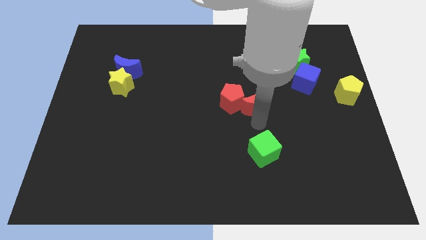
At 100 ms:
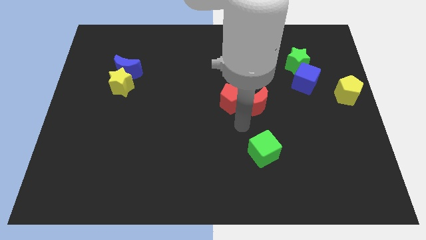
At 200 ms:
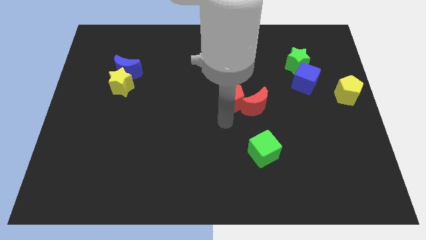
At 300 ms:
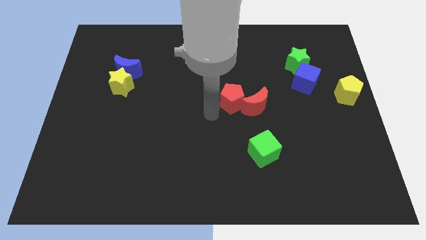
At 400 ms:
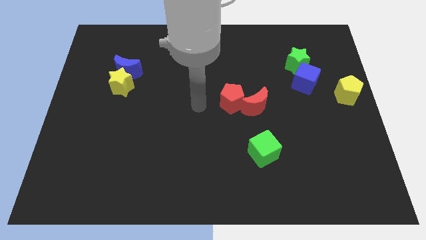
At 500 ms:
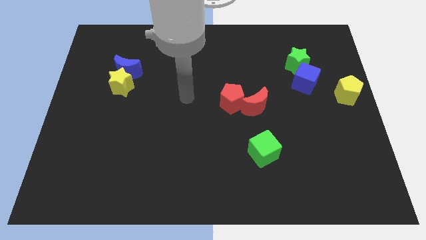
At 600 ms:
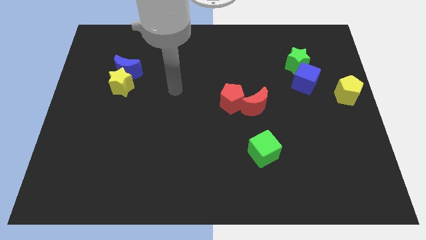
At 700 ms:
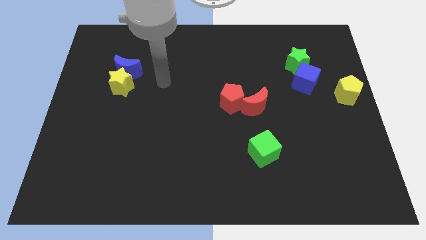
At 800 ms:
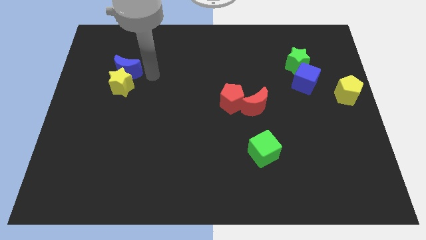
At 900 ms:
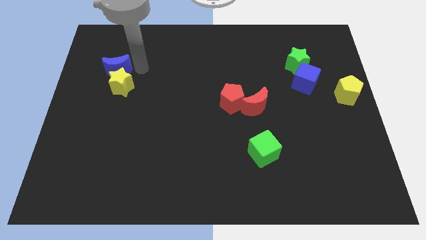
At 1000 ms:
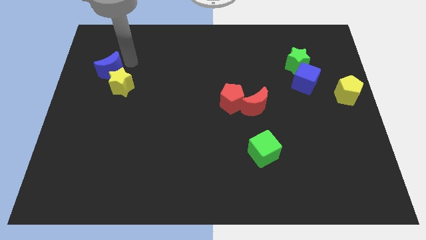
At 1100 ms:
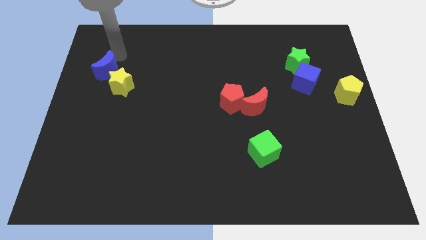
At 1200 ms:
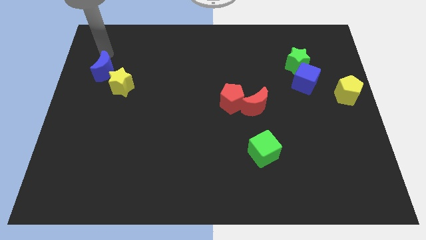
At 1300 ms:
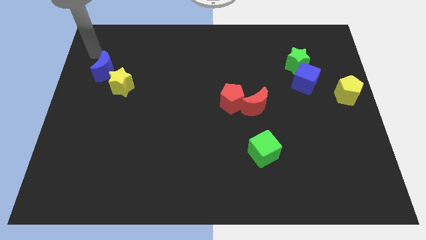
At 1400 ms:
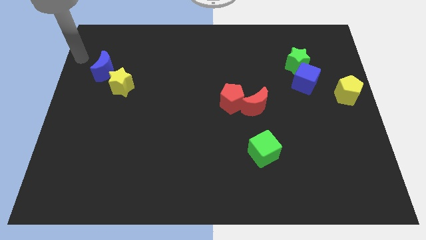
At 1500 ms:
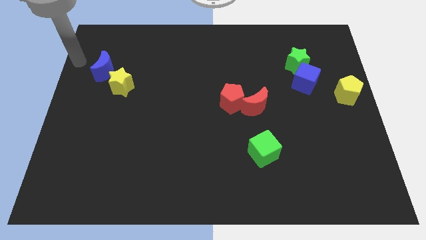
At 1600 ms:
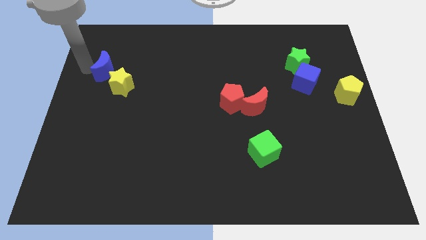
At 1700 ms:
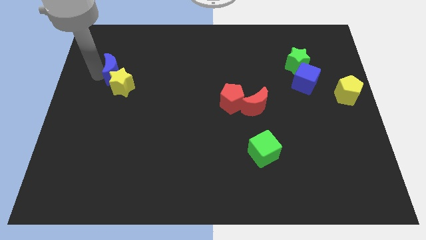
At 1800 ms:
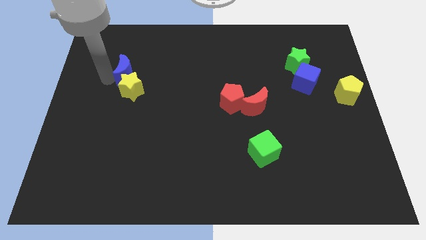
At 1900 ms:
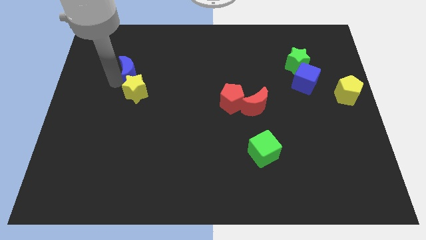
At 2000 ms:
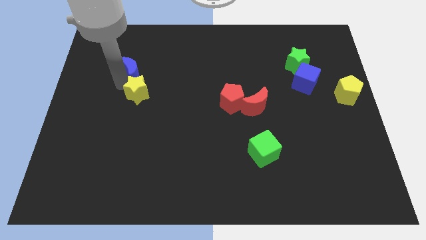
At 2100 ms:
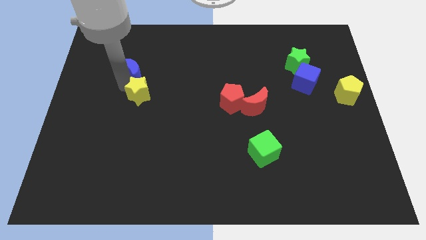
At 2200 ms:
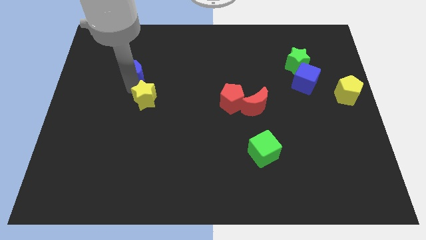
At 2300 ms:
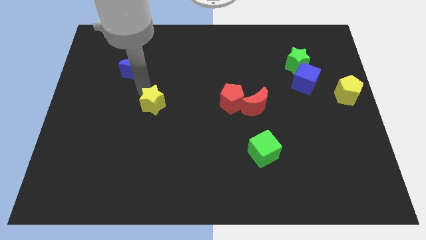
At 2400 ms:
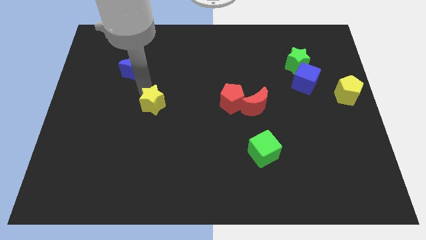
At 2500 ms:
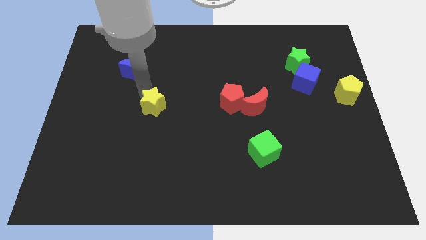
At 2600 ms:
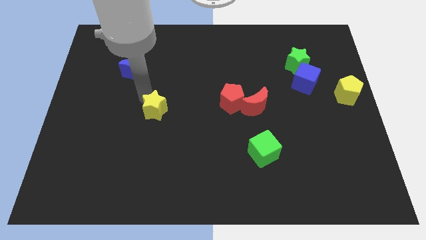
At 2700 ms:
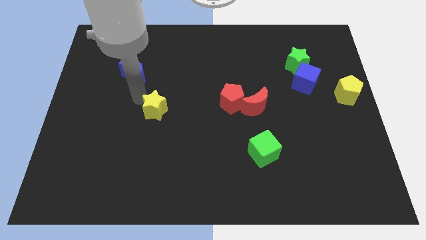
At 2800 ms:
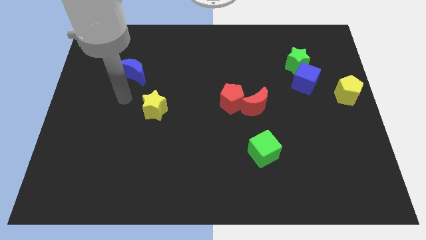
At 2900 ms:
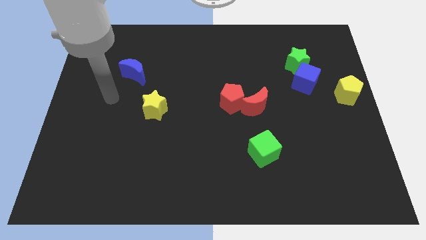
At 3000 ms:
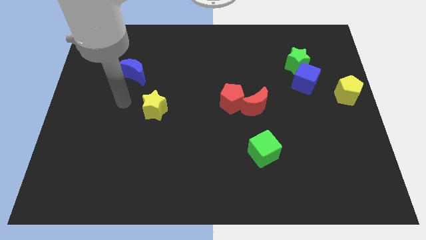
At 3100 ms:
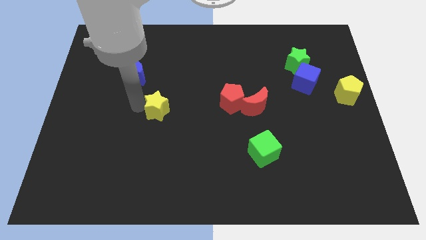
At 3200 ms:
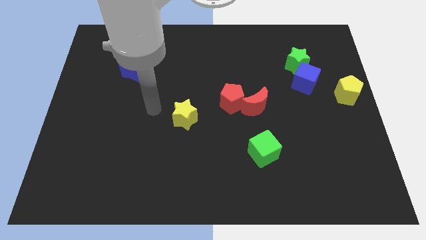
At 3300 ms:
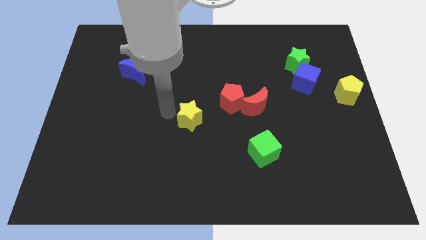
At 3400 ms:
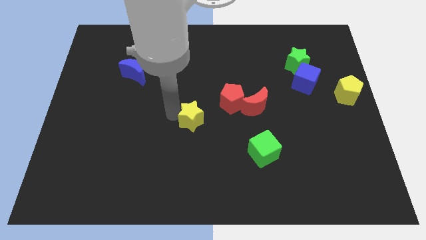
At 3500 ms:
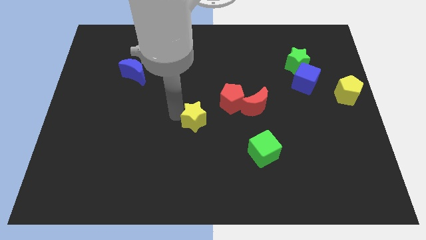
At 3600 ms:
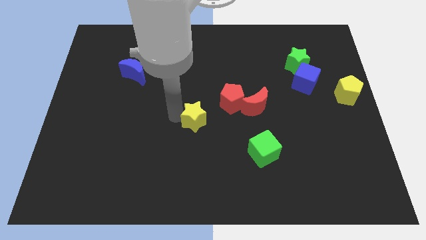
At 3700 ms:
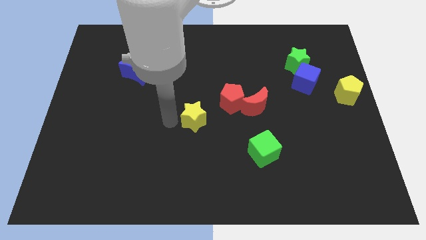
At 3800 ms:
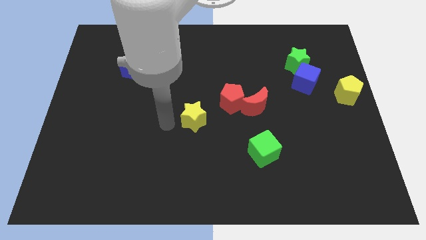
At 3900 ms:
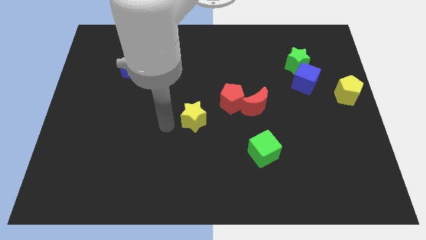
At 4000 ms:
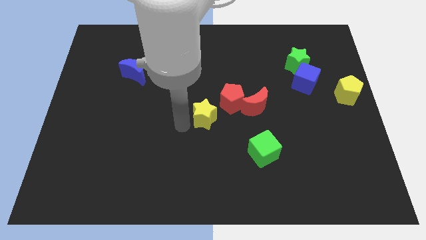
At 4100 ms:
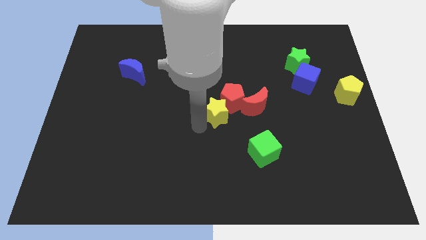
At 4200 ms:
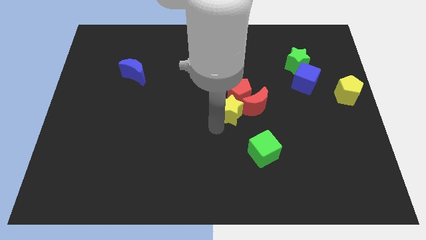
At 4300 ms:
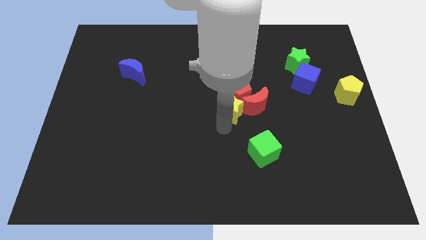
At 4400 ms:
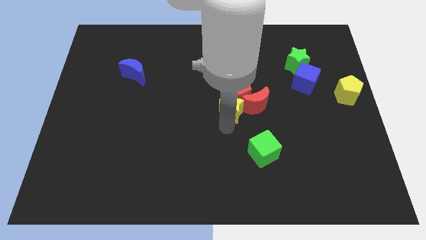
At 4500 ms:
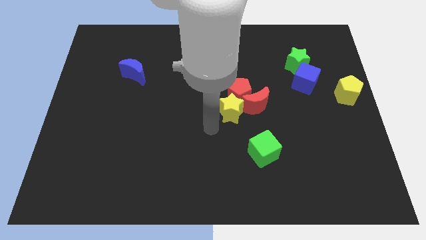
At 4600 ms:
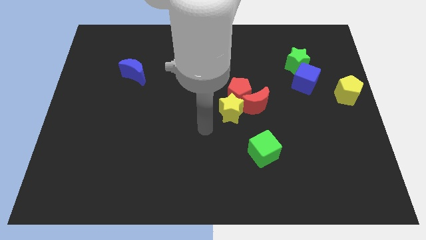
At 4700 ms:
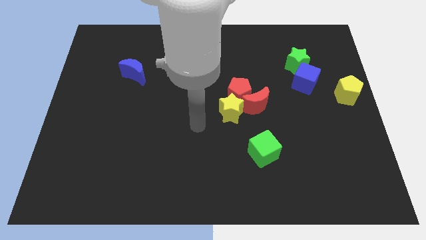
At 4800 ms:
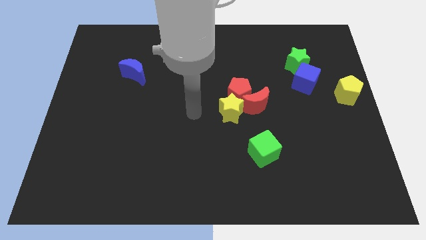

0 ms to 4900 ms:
push the yellow star to the center of the board

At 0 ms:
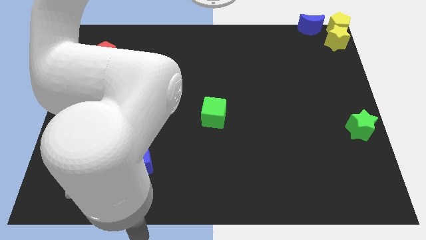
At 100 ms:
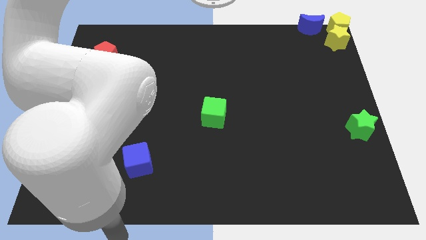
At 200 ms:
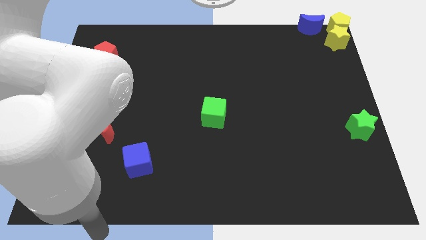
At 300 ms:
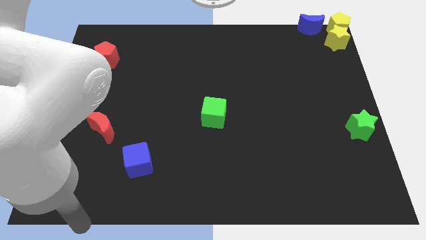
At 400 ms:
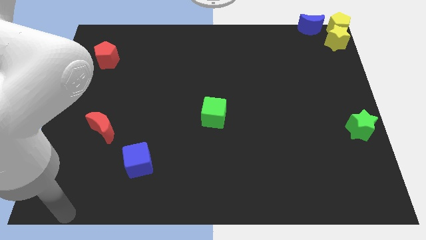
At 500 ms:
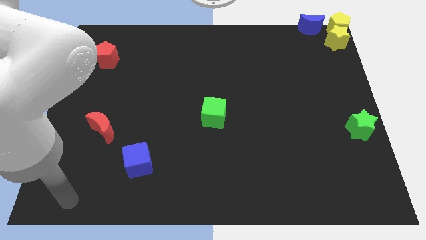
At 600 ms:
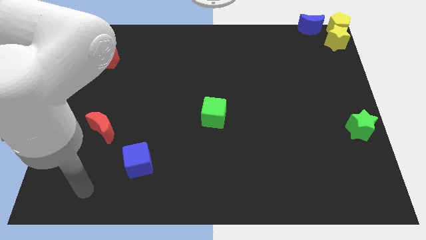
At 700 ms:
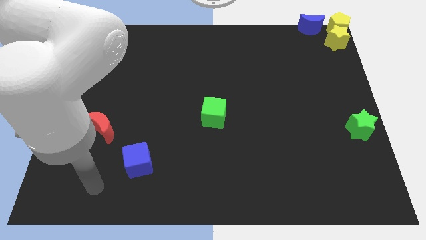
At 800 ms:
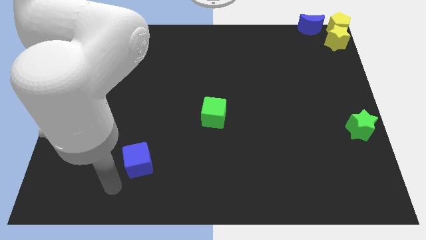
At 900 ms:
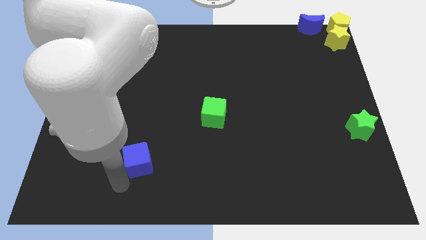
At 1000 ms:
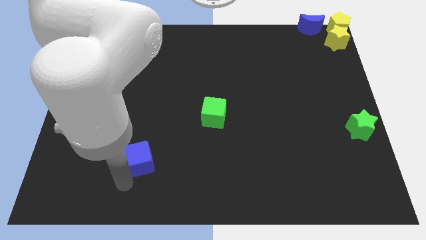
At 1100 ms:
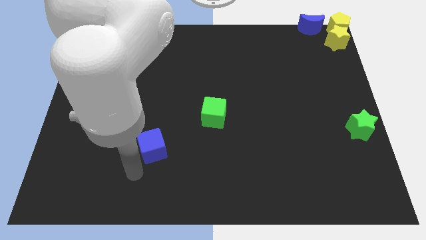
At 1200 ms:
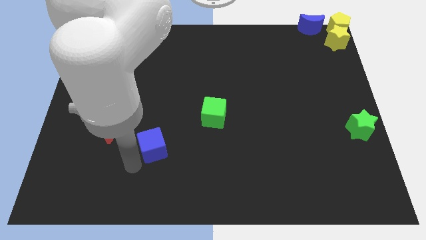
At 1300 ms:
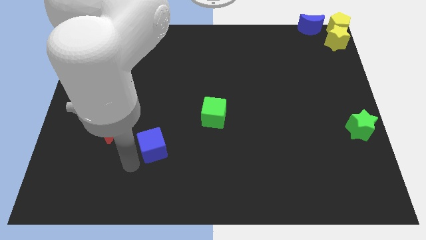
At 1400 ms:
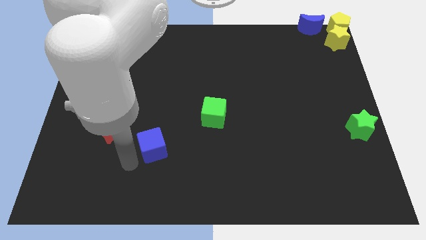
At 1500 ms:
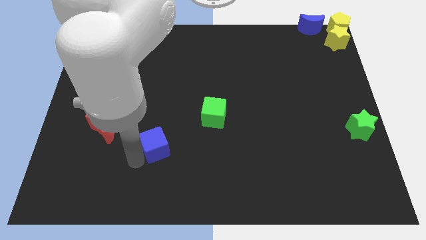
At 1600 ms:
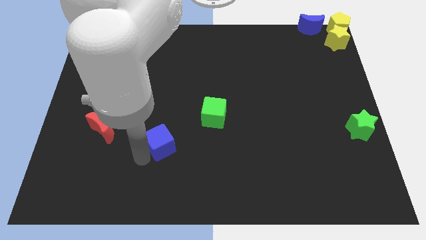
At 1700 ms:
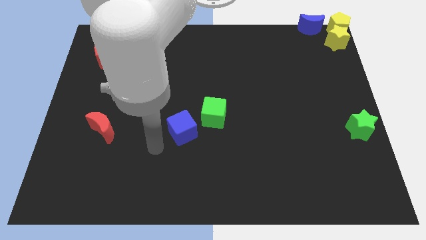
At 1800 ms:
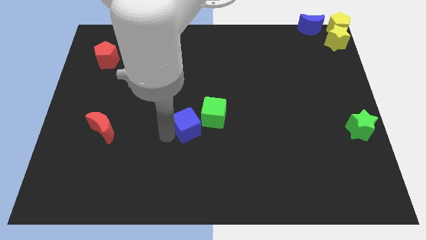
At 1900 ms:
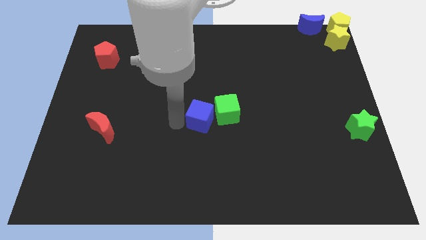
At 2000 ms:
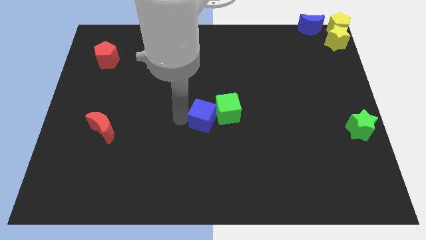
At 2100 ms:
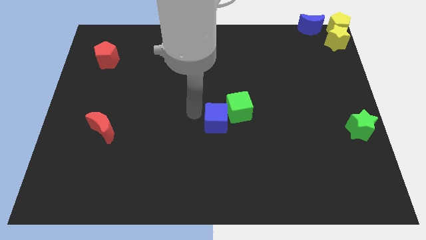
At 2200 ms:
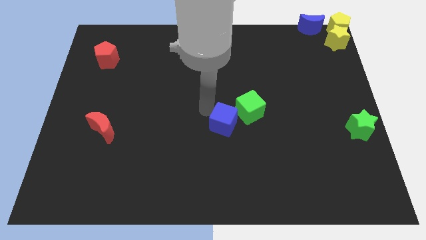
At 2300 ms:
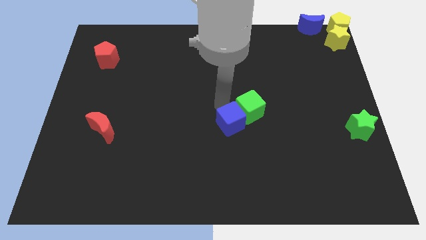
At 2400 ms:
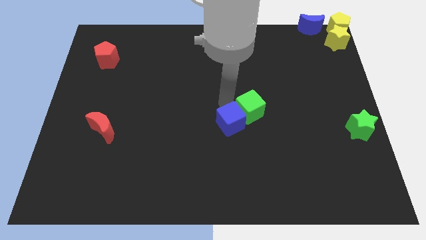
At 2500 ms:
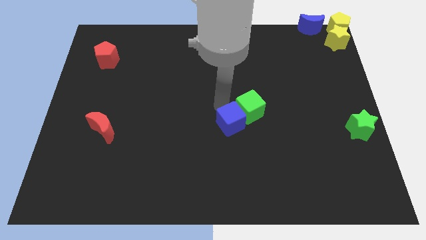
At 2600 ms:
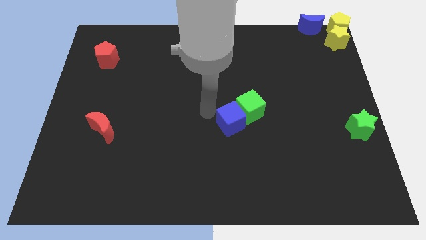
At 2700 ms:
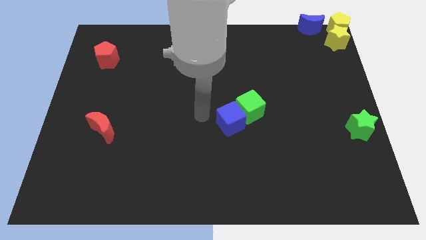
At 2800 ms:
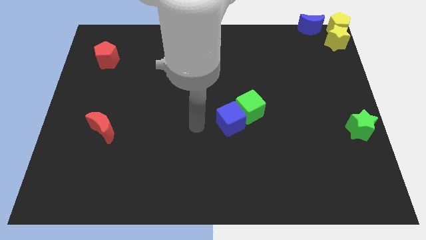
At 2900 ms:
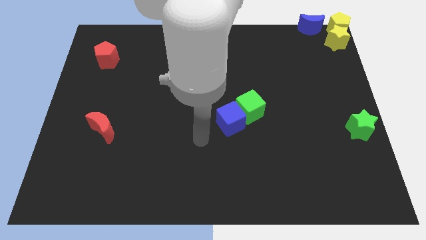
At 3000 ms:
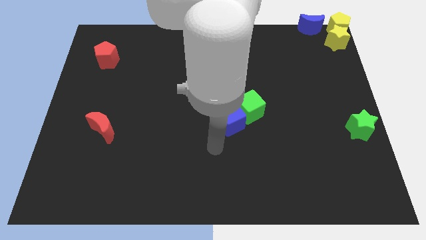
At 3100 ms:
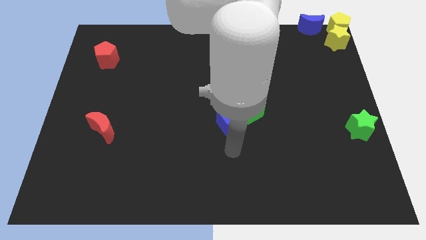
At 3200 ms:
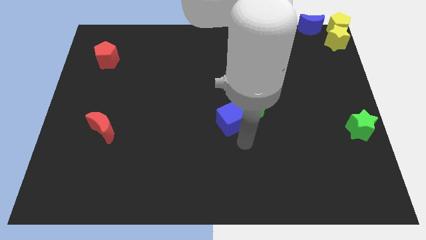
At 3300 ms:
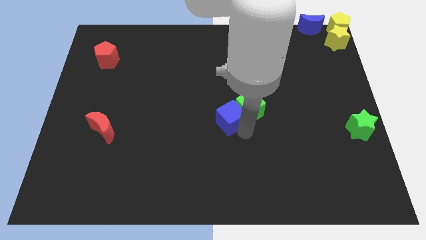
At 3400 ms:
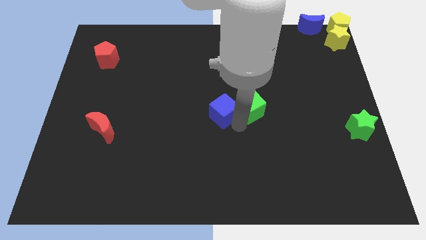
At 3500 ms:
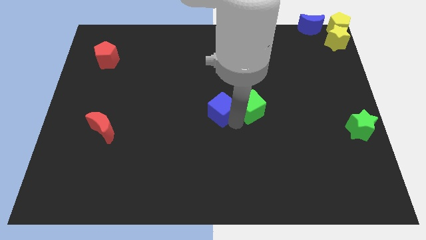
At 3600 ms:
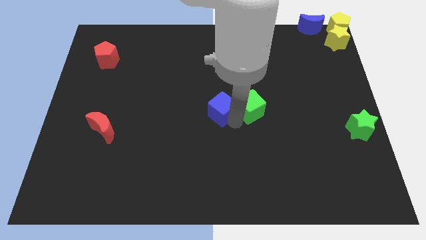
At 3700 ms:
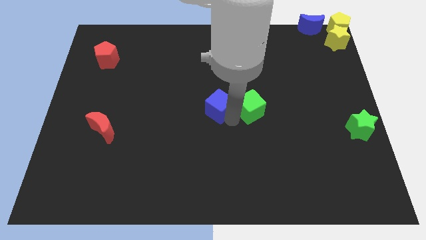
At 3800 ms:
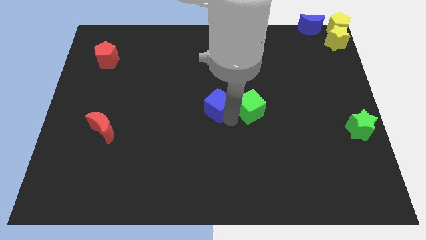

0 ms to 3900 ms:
push the blue cube into the green cube

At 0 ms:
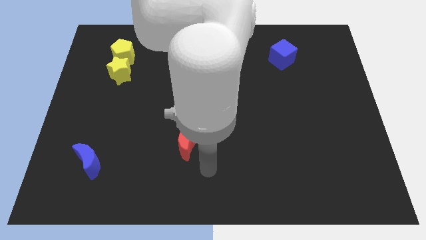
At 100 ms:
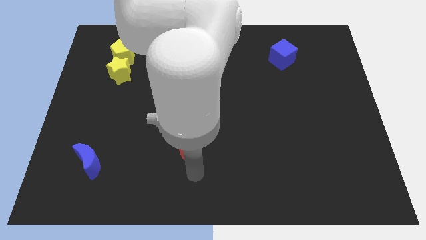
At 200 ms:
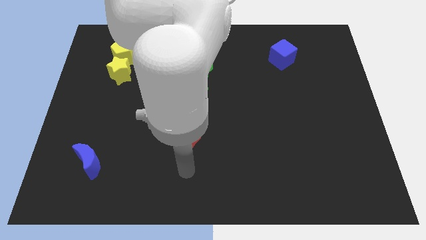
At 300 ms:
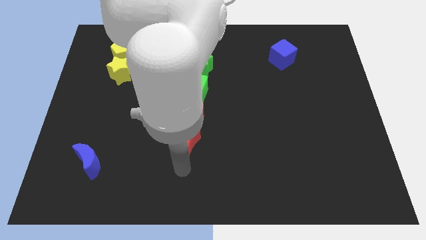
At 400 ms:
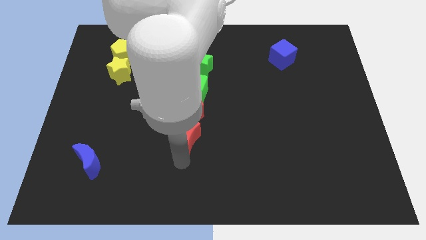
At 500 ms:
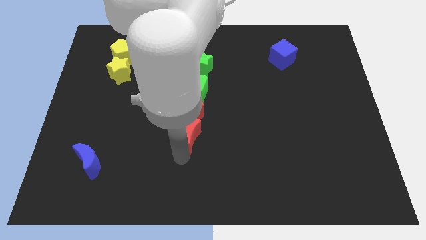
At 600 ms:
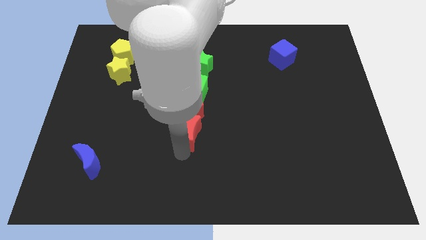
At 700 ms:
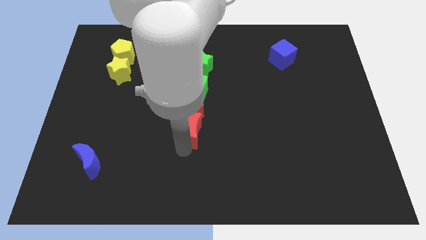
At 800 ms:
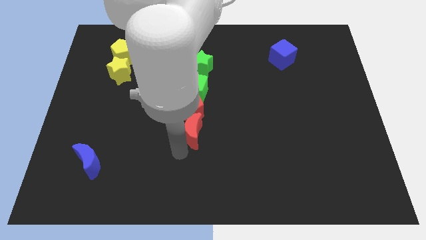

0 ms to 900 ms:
push the red crescent below the red pentagon
